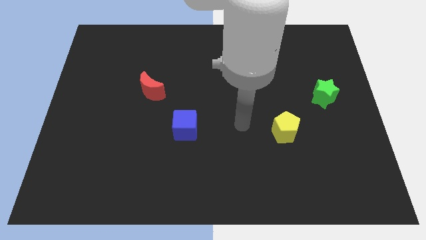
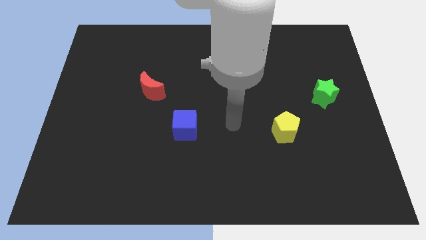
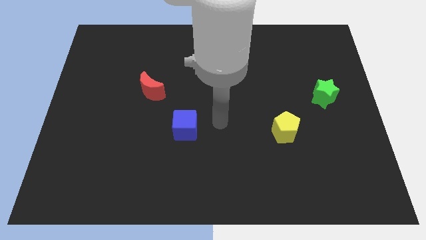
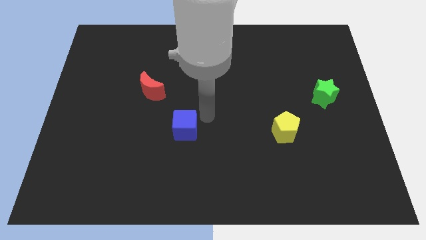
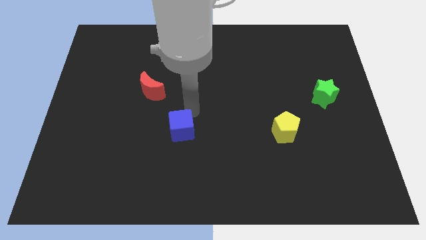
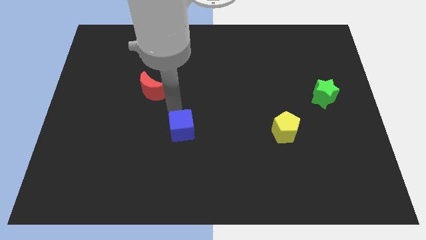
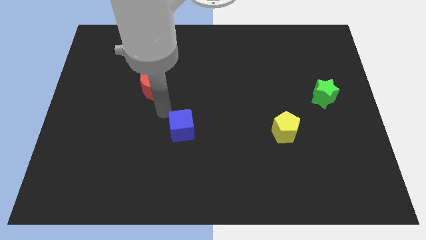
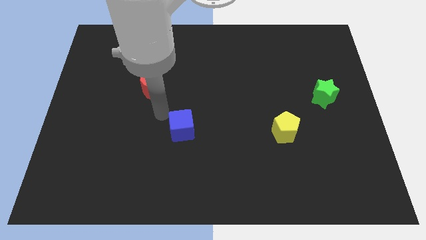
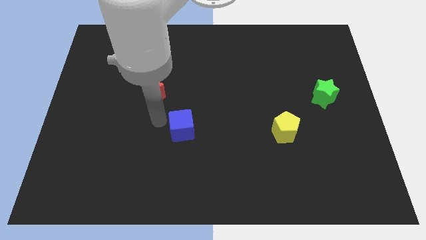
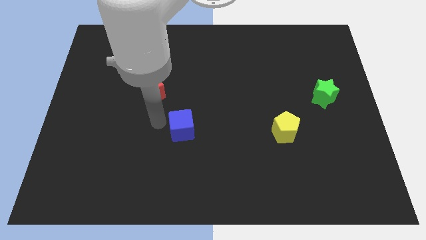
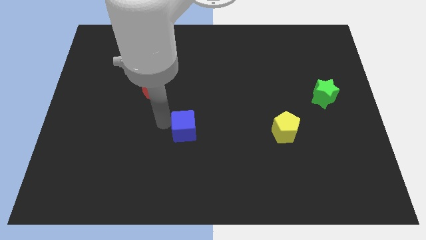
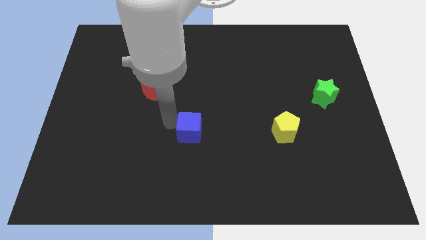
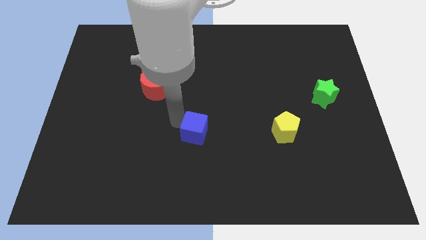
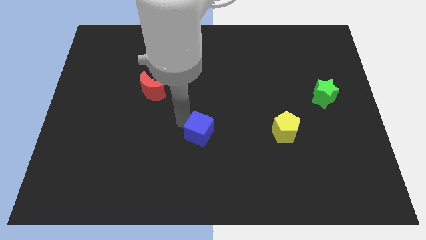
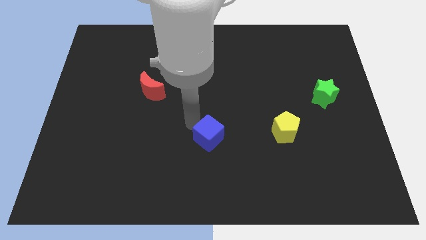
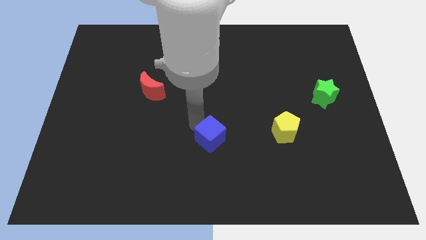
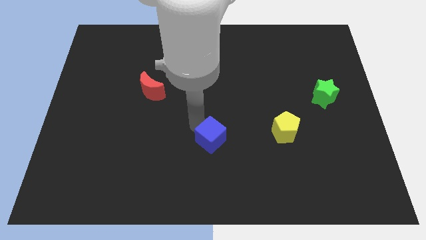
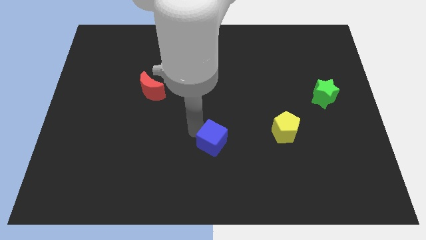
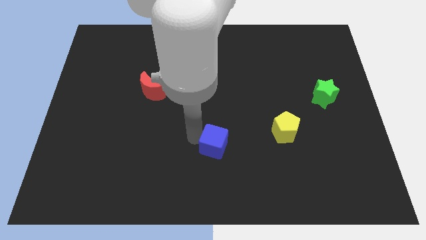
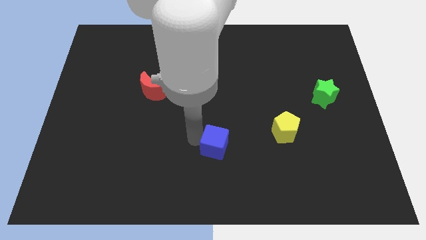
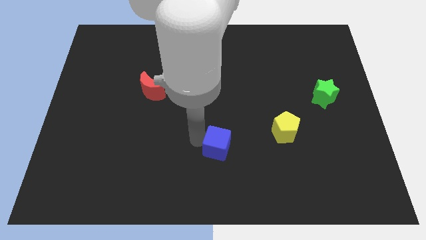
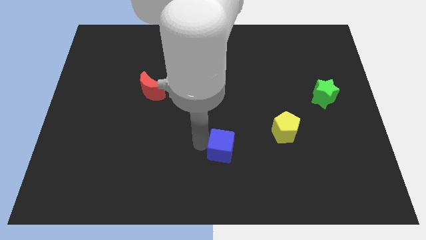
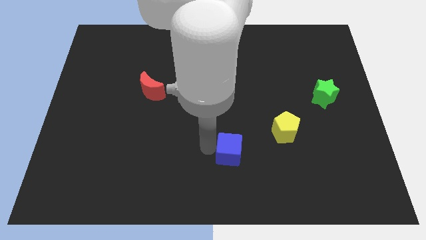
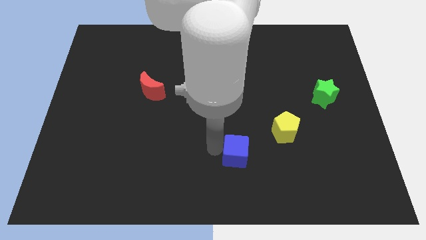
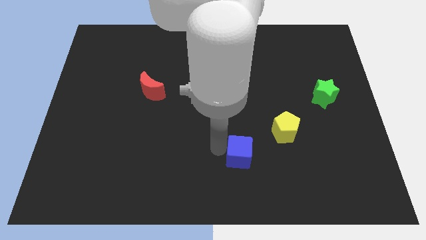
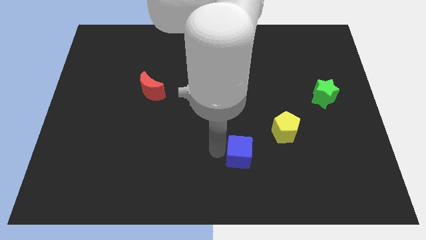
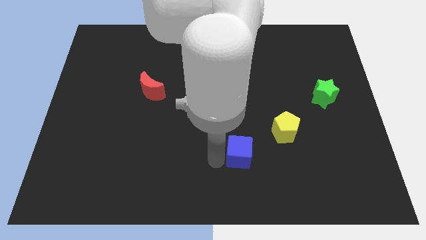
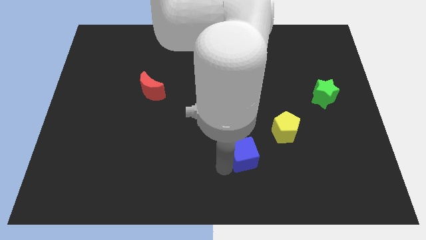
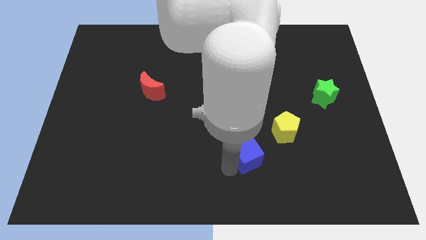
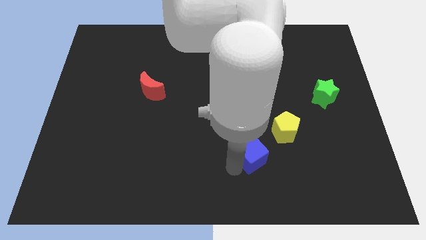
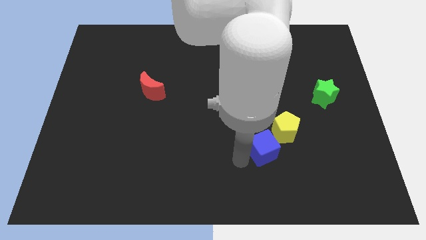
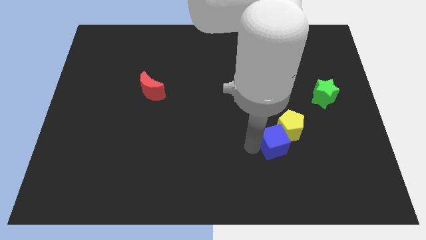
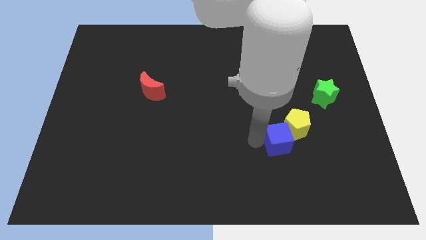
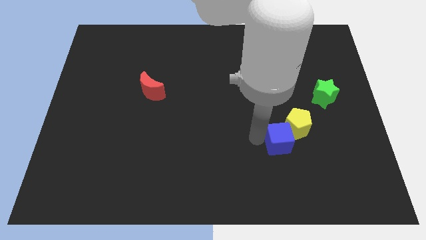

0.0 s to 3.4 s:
push the blue block to the yellow block

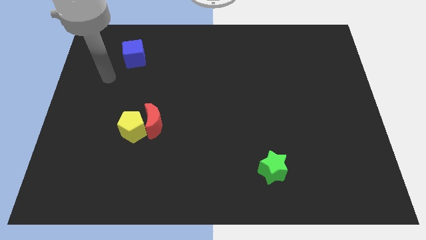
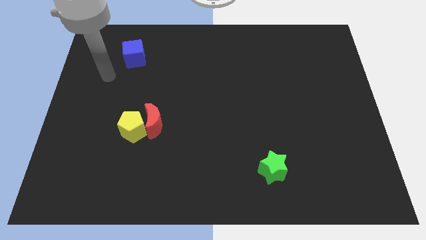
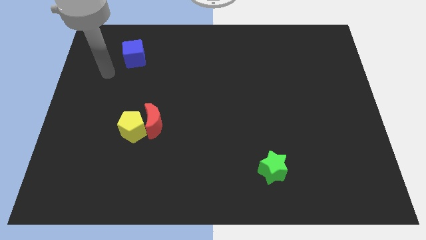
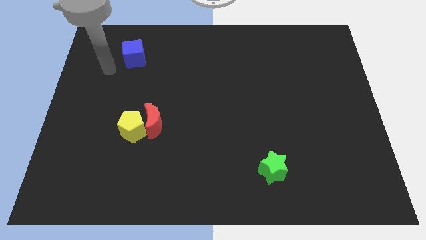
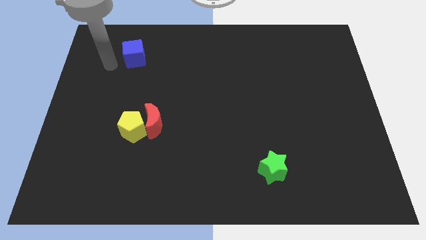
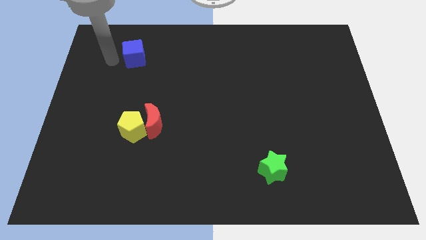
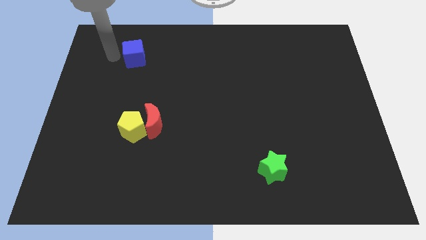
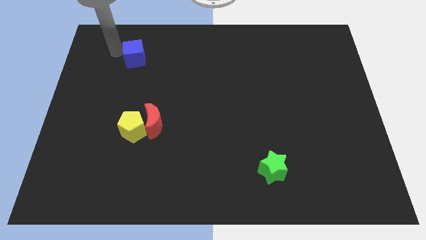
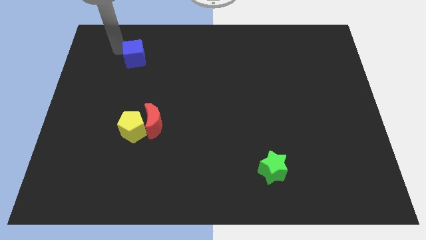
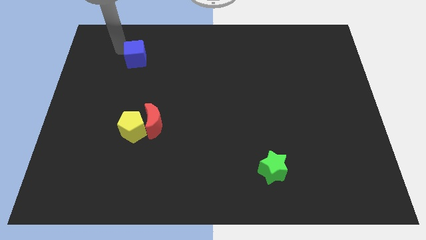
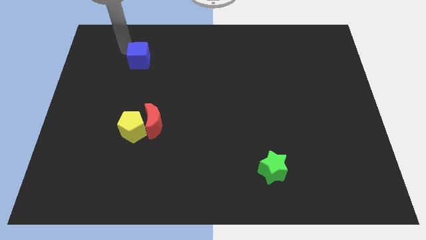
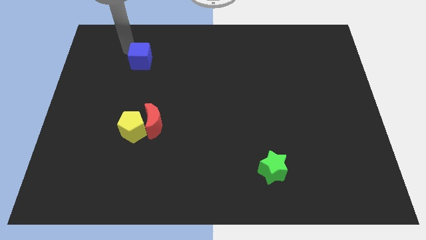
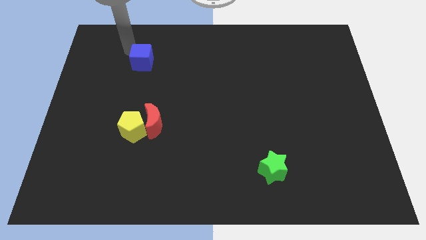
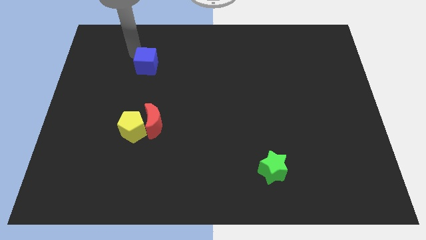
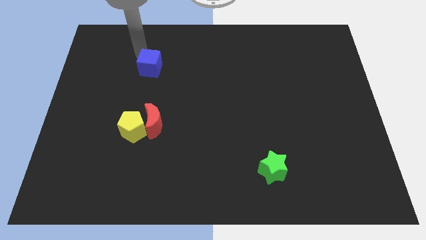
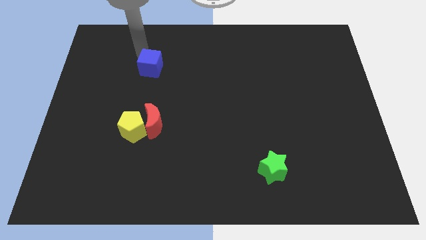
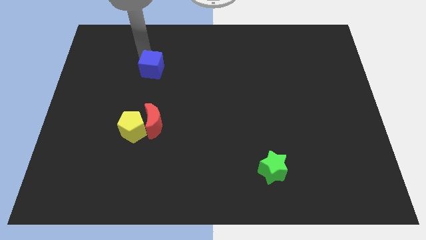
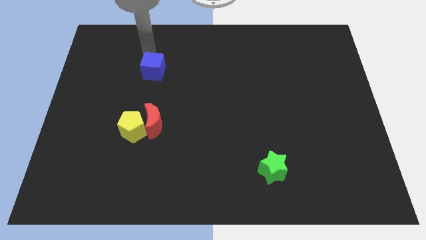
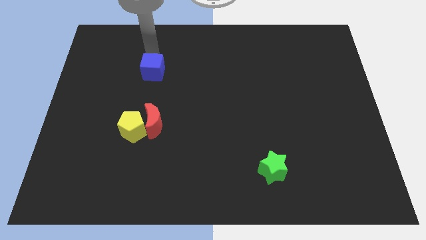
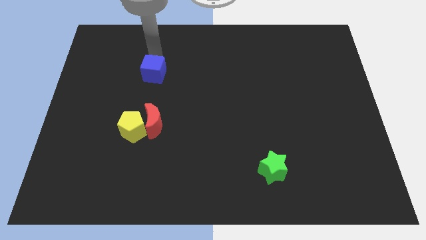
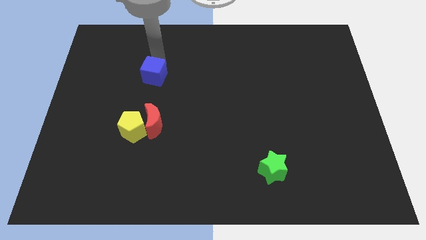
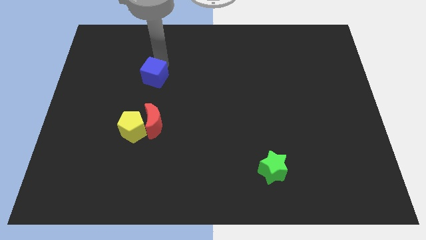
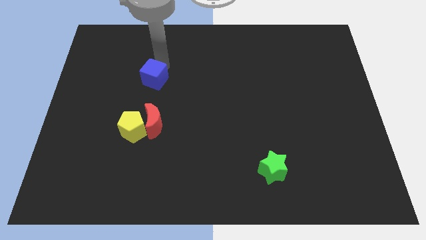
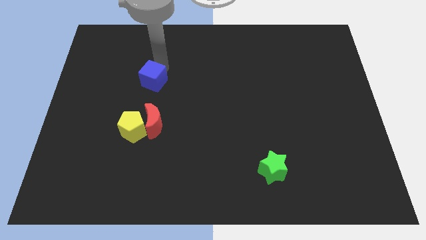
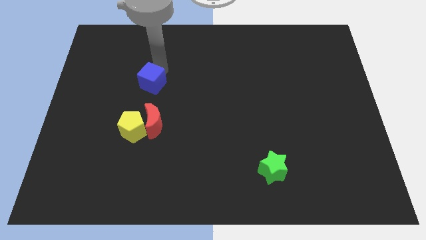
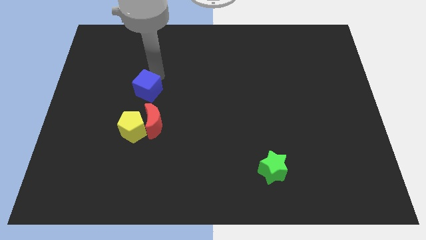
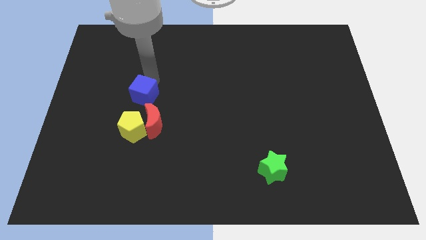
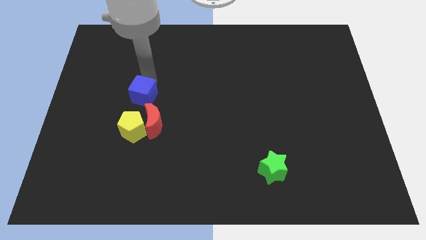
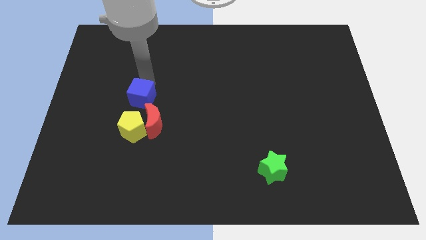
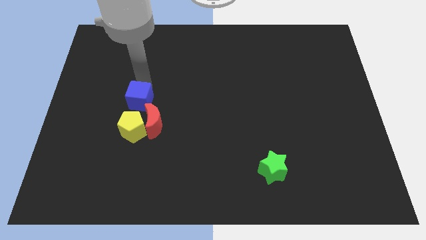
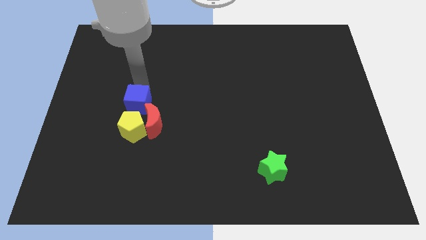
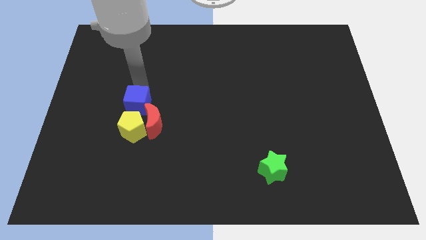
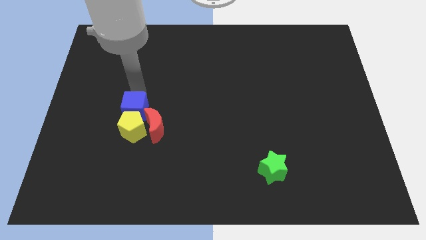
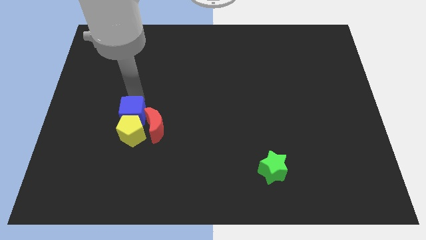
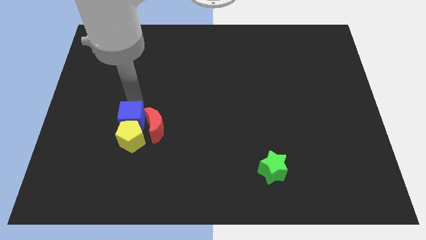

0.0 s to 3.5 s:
slide the blue cube close to the yellow block

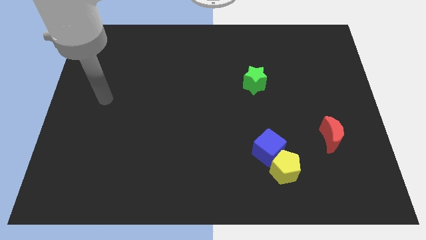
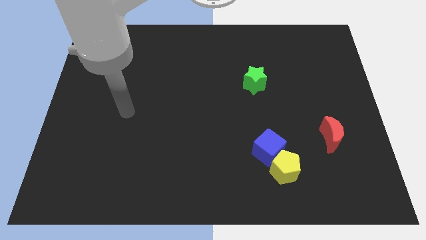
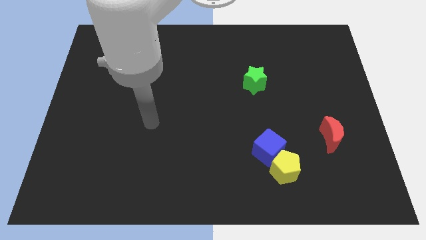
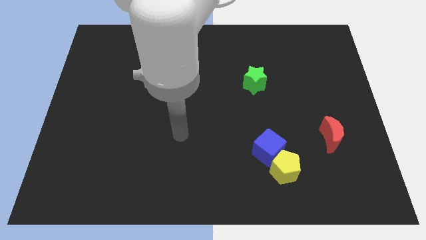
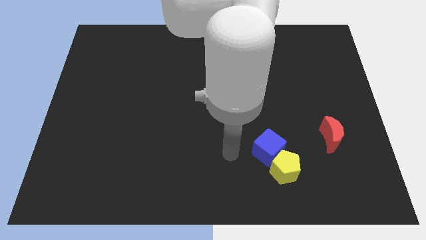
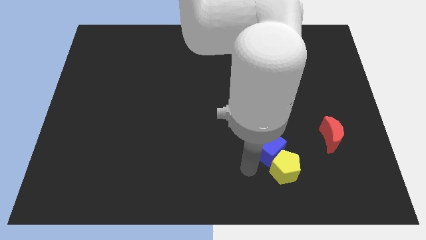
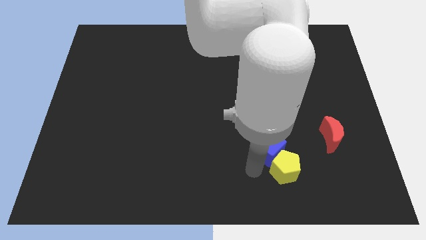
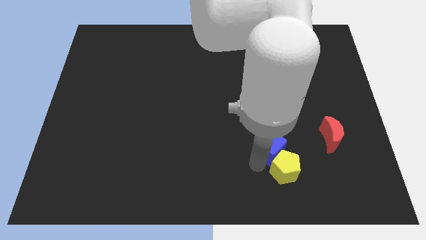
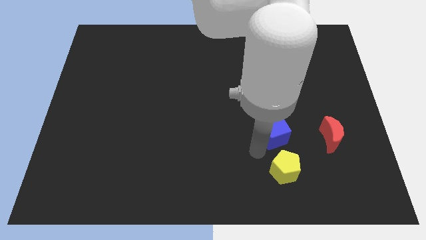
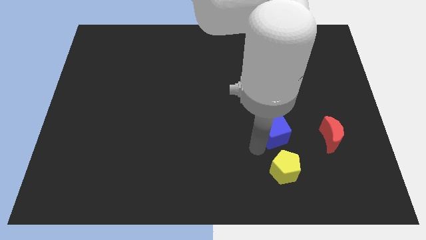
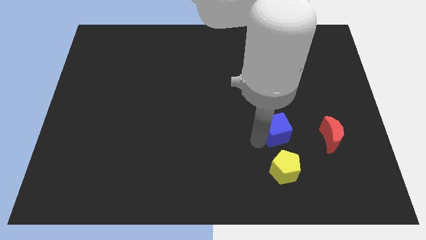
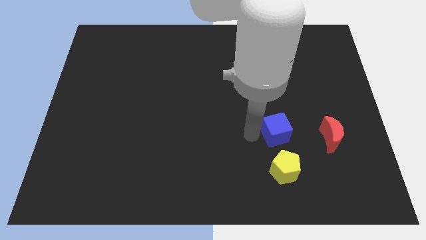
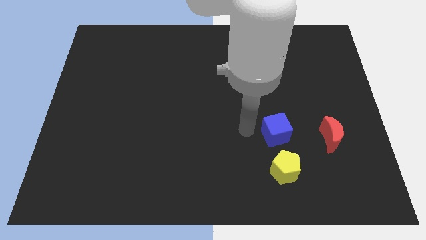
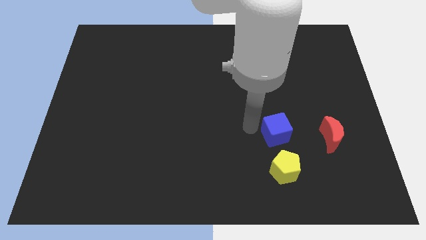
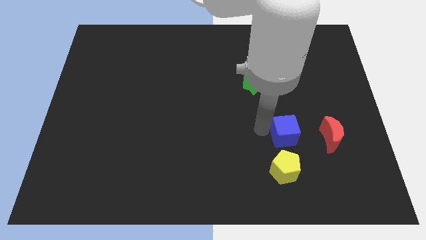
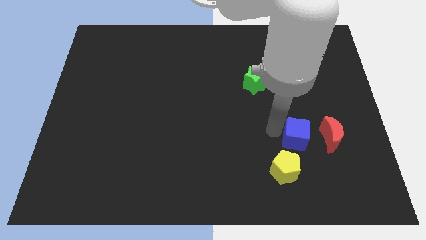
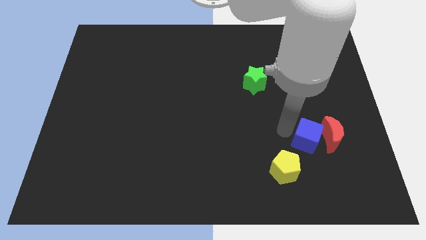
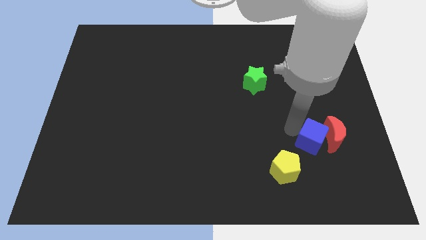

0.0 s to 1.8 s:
slide the cube close to the red block
